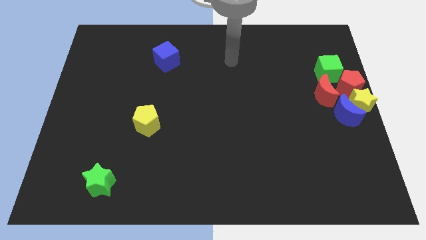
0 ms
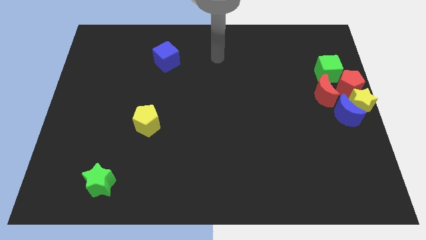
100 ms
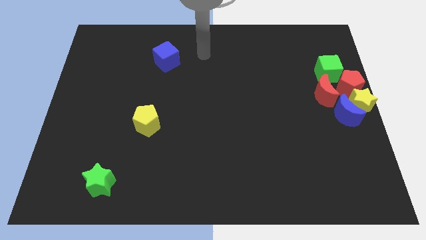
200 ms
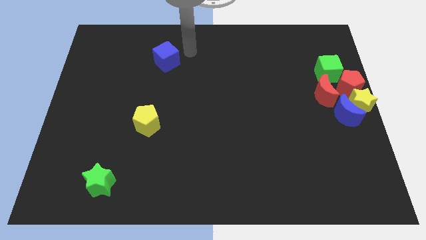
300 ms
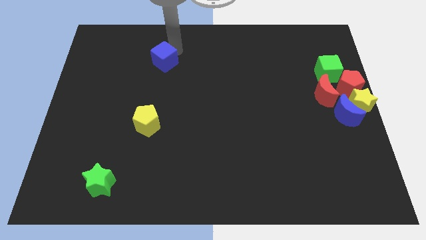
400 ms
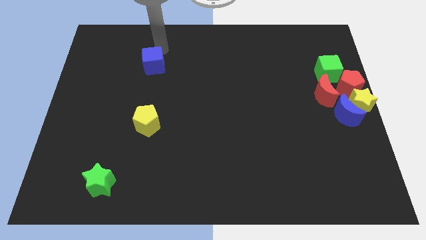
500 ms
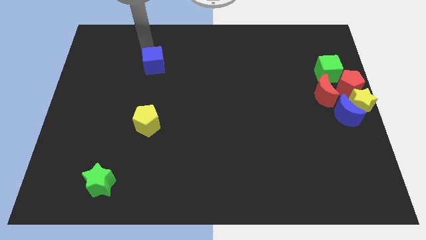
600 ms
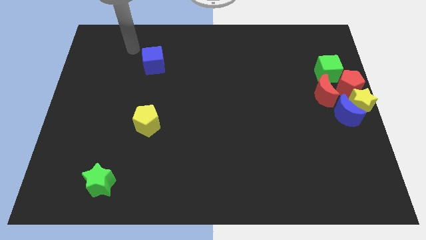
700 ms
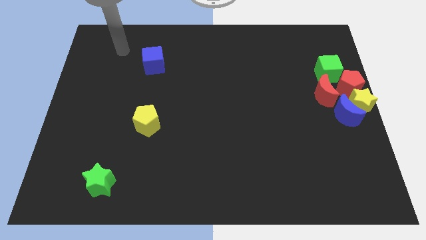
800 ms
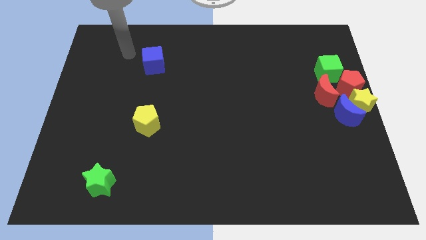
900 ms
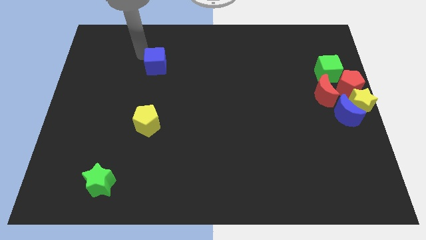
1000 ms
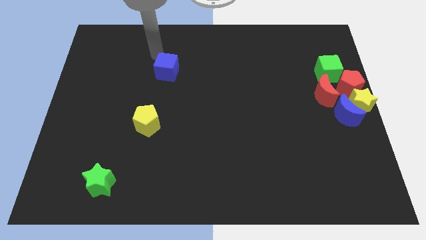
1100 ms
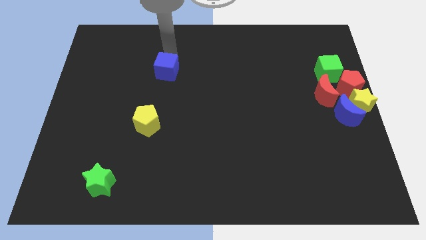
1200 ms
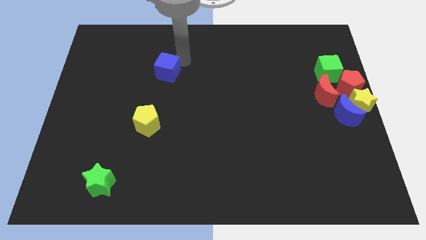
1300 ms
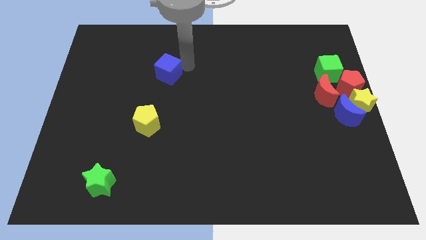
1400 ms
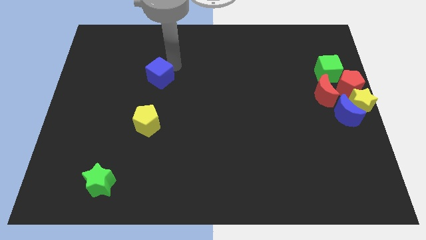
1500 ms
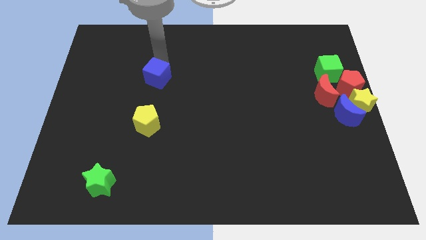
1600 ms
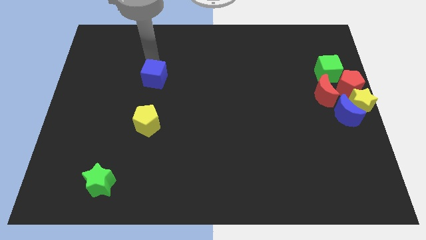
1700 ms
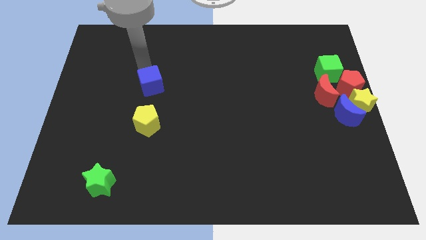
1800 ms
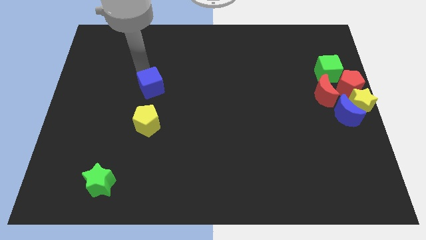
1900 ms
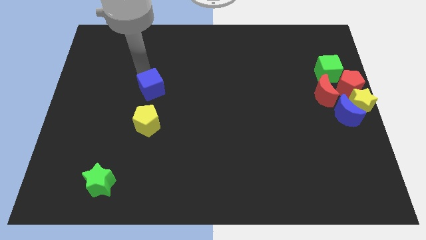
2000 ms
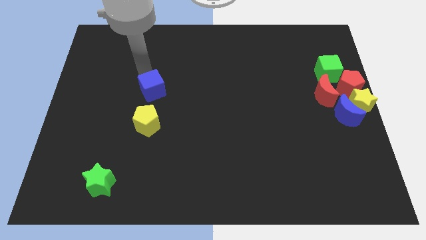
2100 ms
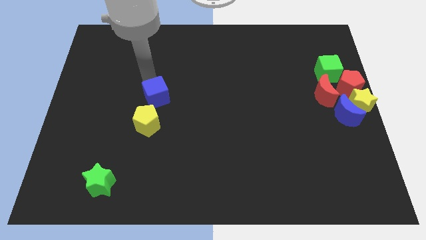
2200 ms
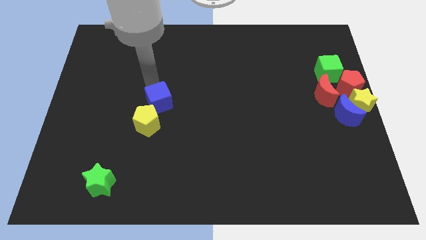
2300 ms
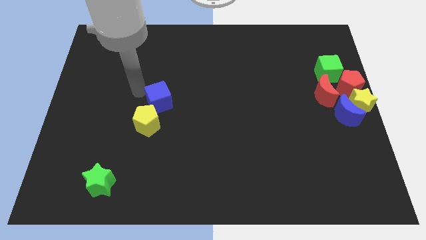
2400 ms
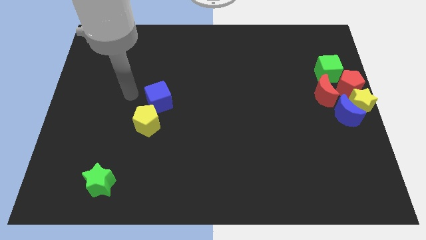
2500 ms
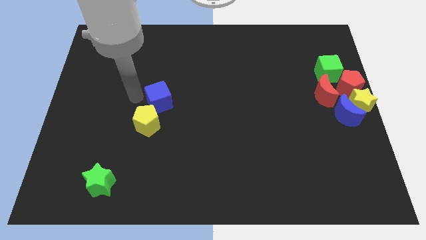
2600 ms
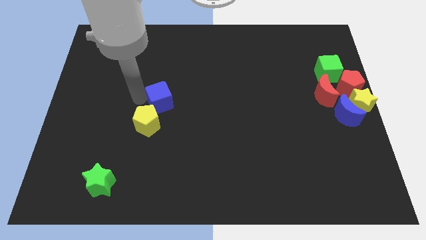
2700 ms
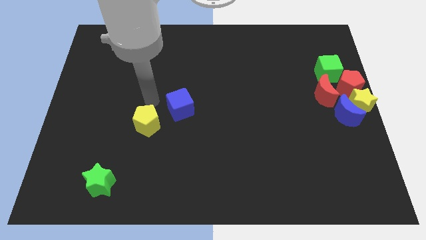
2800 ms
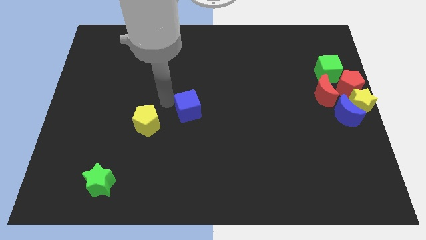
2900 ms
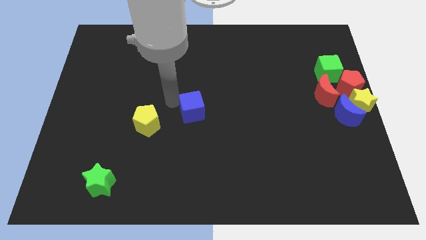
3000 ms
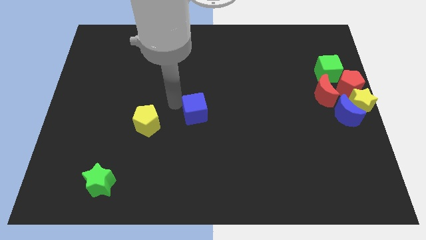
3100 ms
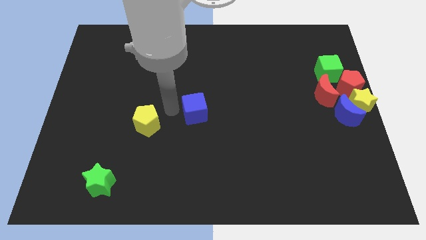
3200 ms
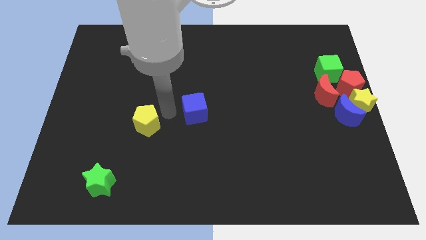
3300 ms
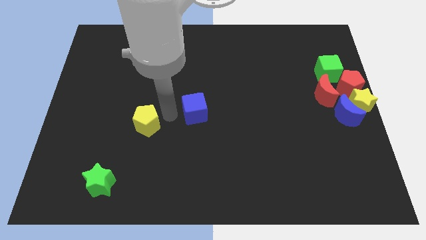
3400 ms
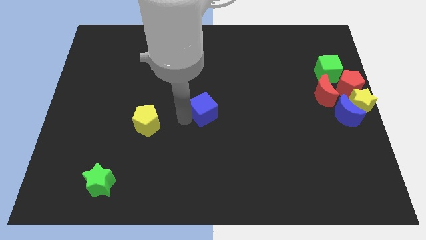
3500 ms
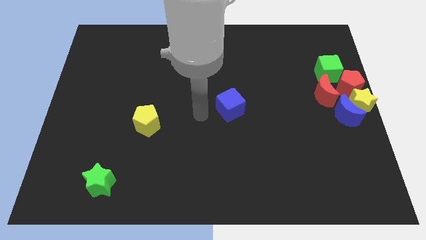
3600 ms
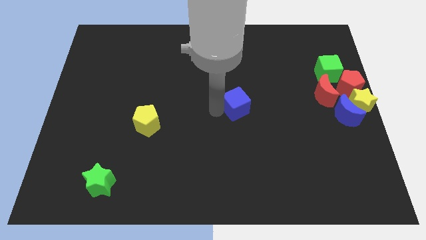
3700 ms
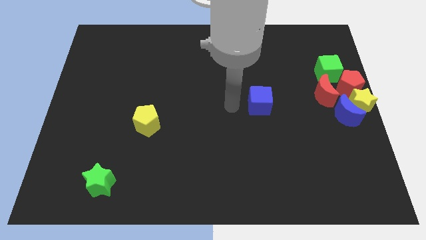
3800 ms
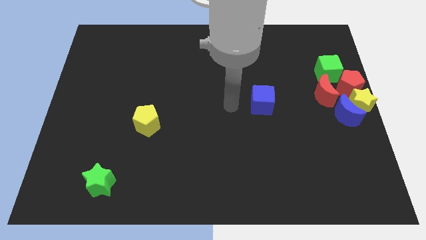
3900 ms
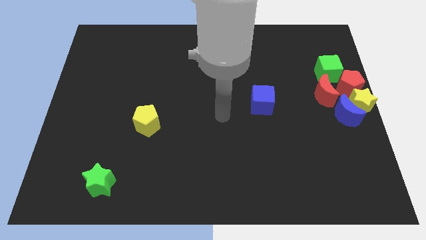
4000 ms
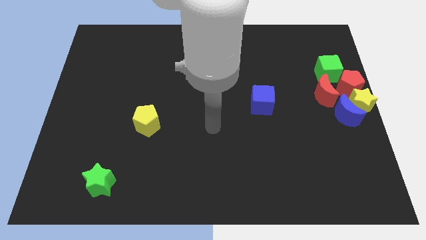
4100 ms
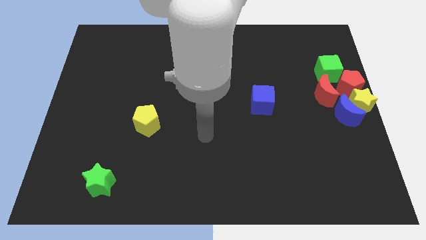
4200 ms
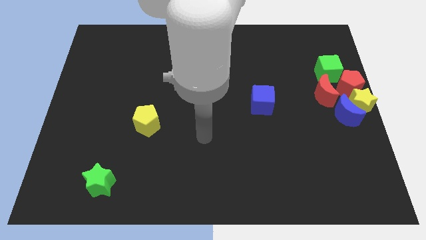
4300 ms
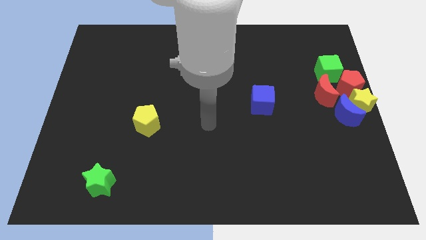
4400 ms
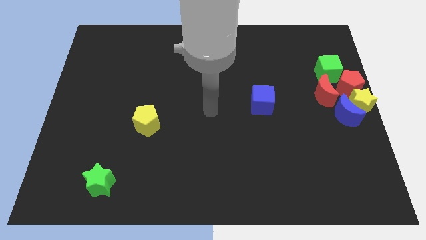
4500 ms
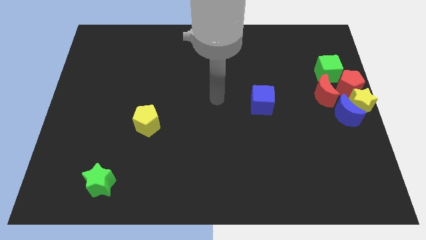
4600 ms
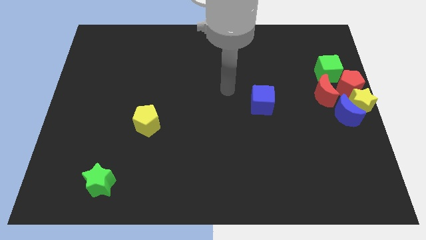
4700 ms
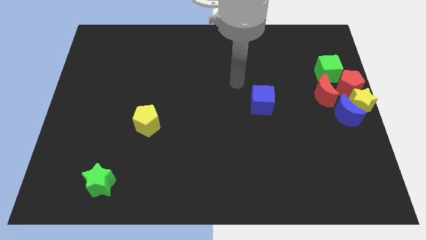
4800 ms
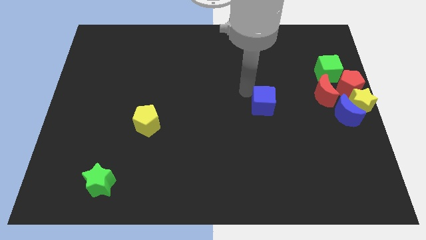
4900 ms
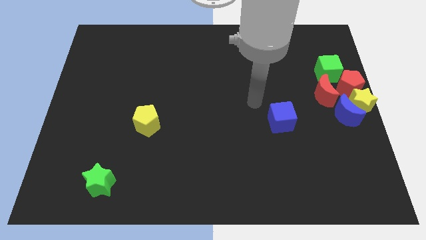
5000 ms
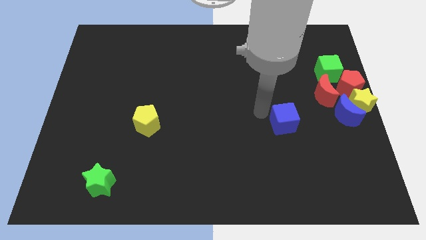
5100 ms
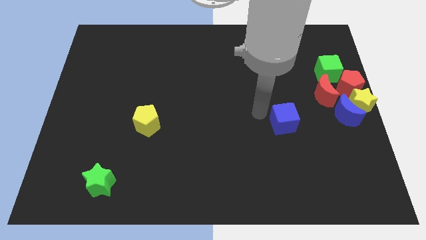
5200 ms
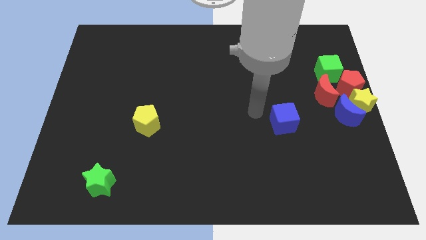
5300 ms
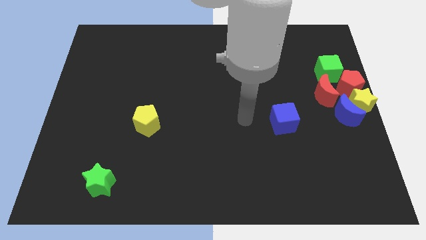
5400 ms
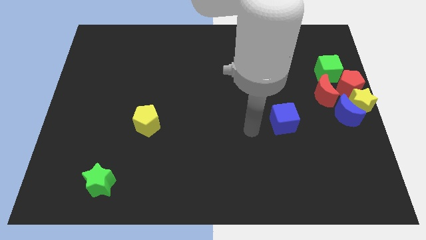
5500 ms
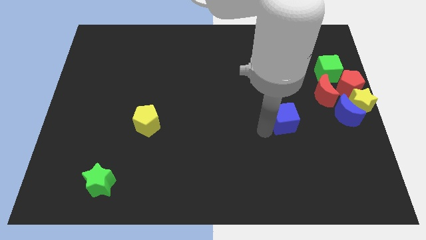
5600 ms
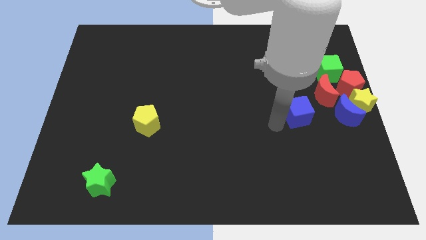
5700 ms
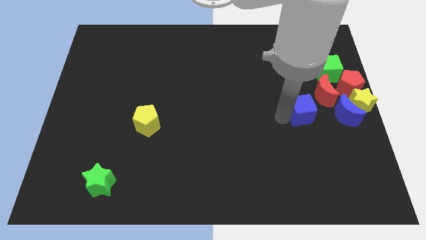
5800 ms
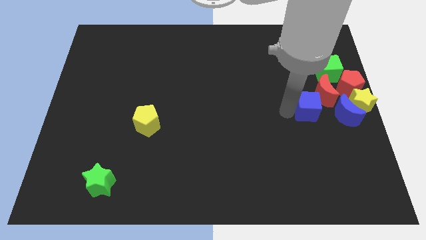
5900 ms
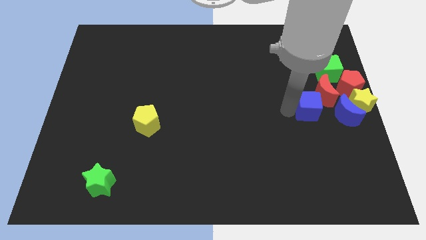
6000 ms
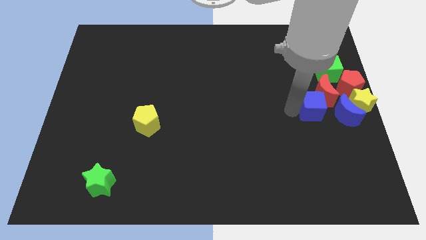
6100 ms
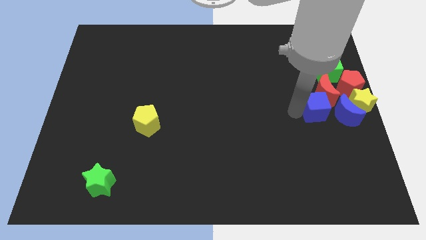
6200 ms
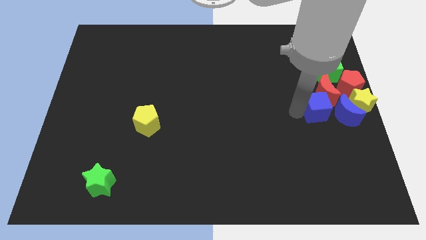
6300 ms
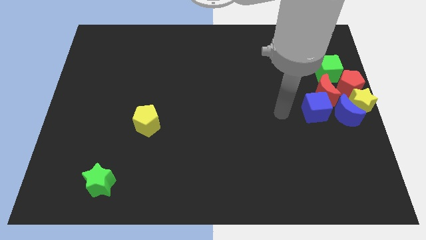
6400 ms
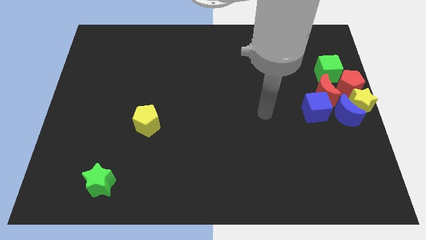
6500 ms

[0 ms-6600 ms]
push the blue cube left to the blue crescent

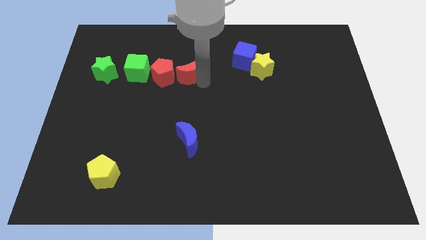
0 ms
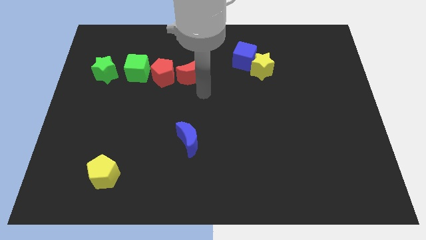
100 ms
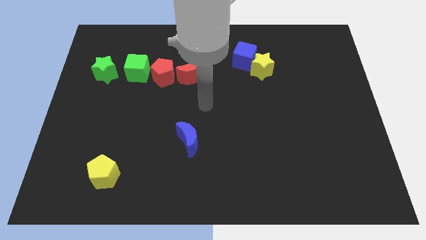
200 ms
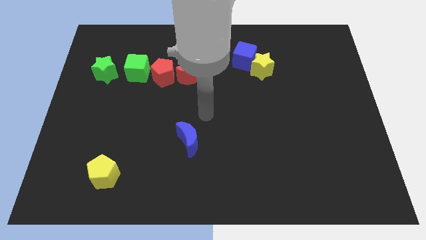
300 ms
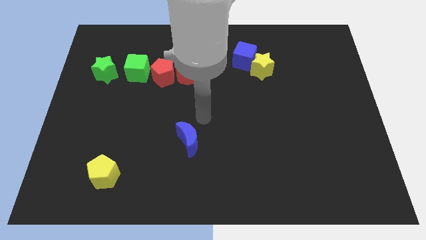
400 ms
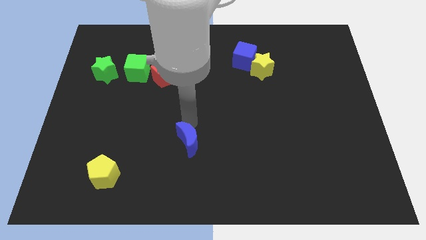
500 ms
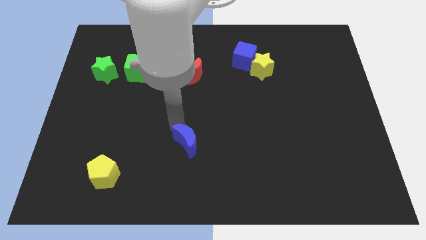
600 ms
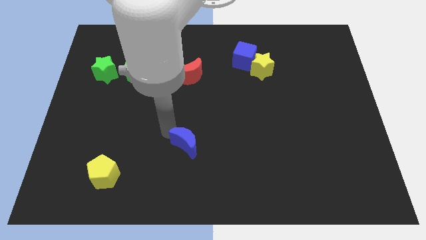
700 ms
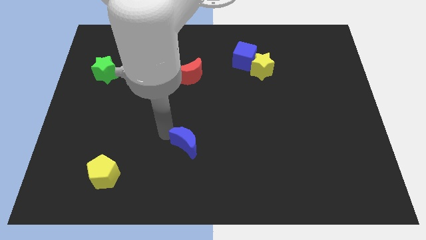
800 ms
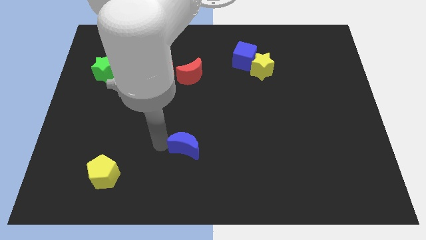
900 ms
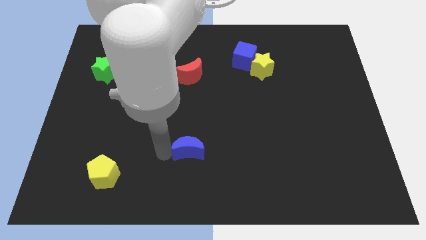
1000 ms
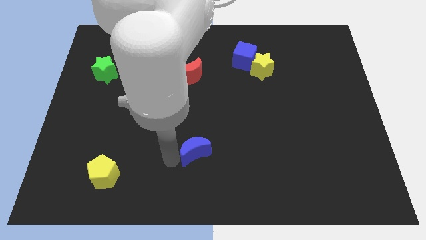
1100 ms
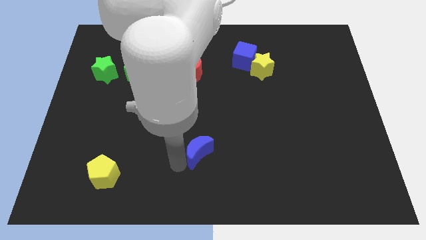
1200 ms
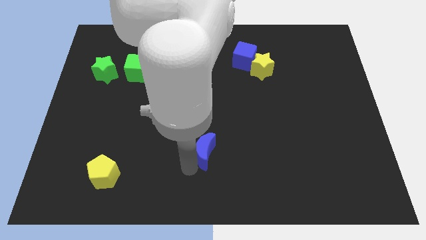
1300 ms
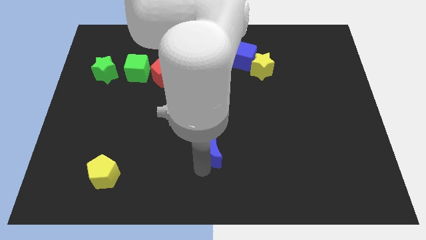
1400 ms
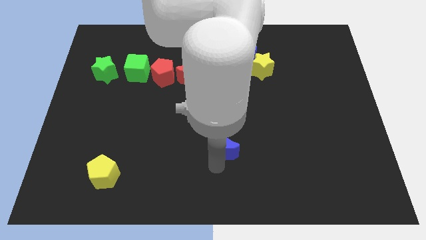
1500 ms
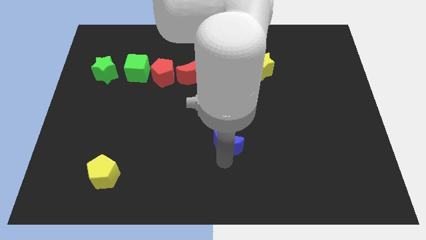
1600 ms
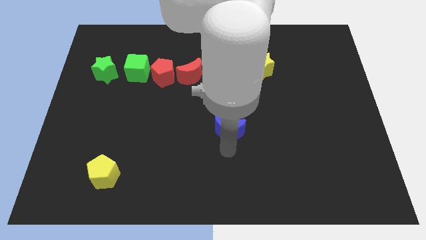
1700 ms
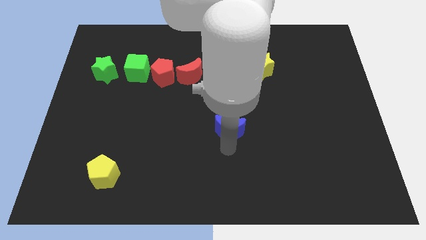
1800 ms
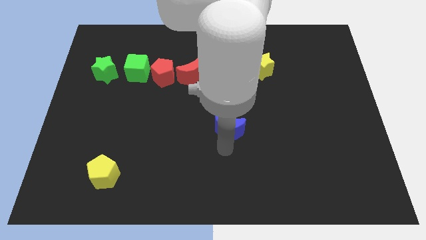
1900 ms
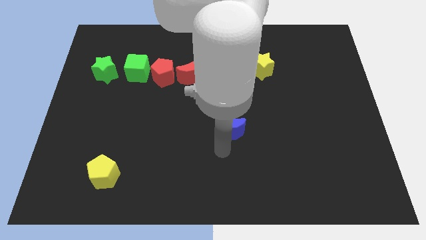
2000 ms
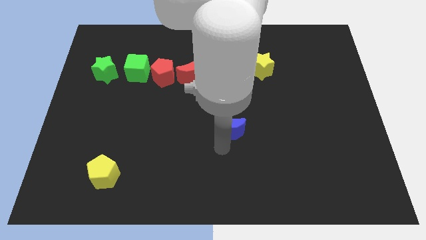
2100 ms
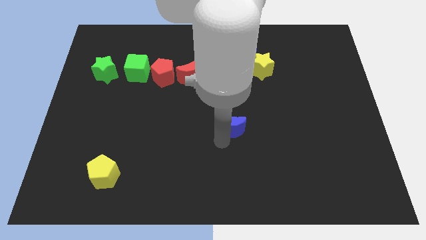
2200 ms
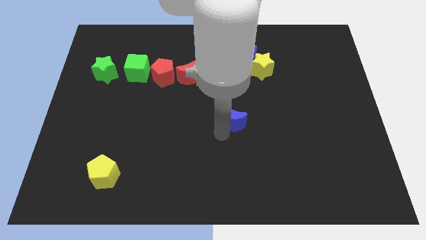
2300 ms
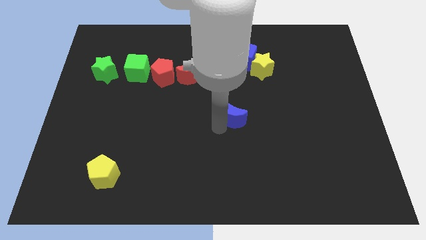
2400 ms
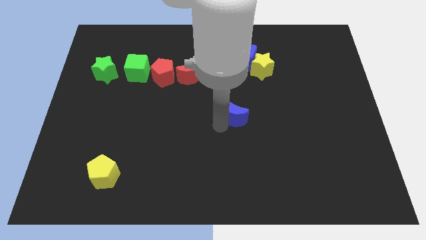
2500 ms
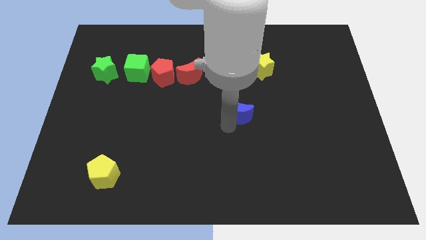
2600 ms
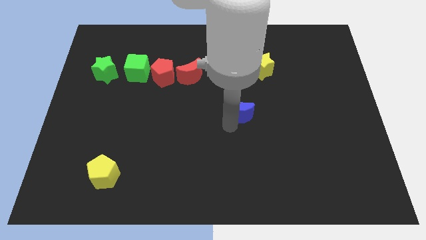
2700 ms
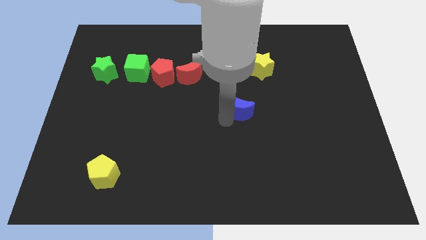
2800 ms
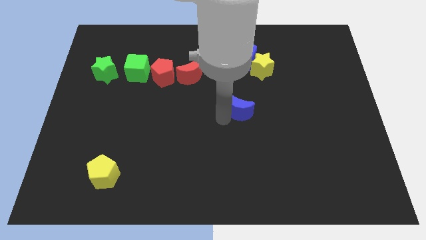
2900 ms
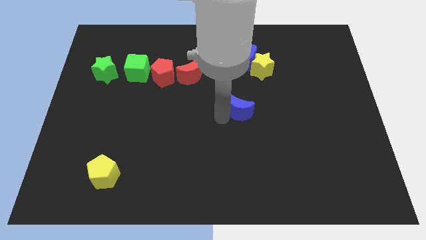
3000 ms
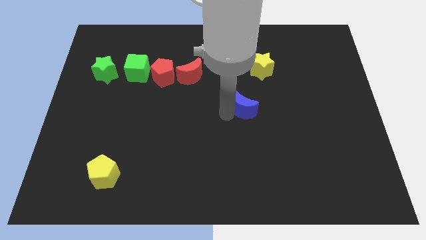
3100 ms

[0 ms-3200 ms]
push the blue crescent vertically to the bottom side of the blue cube
